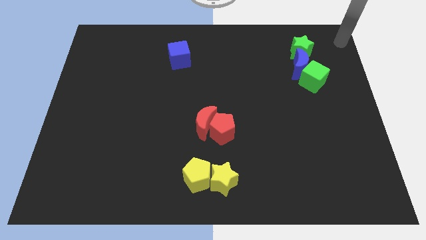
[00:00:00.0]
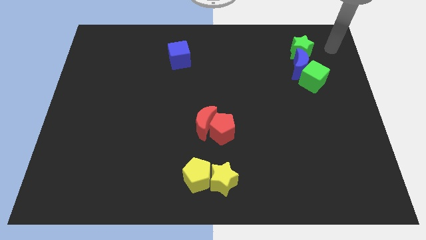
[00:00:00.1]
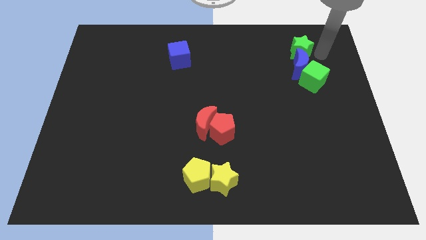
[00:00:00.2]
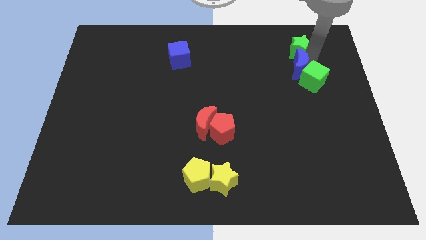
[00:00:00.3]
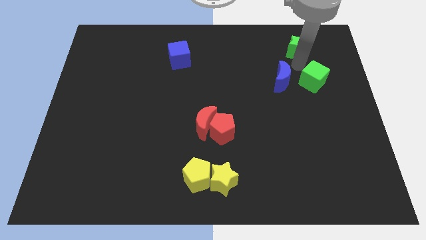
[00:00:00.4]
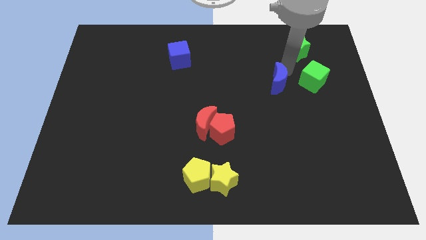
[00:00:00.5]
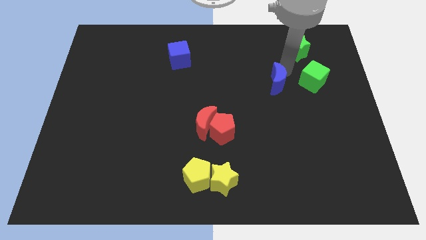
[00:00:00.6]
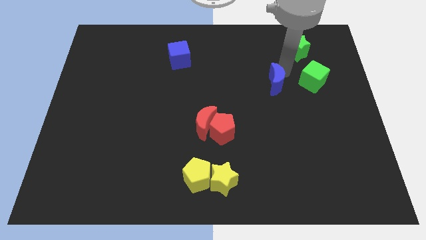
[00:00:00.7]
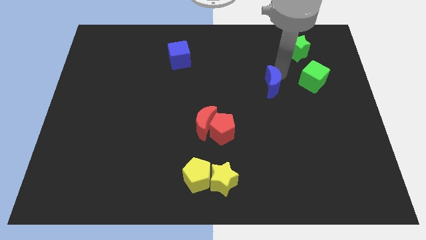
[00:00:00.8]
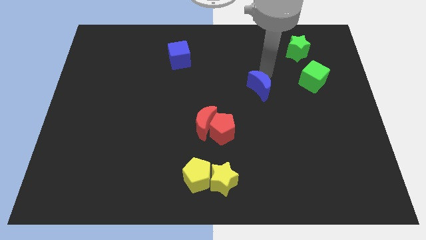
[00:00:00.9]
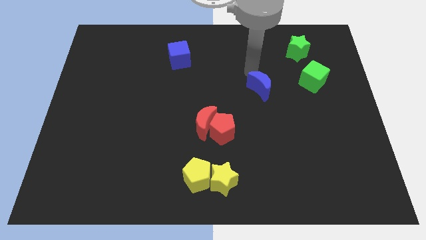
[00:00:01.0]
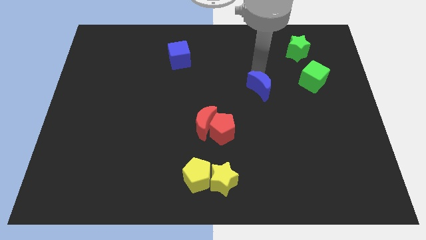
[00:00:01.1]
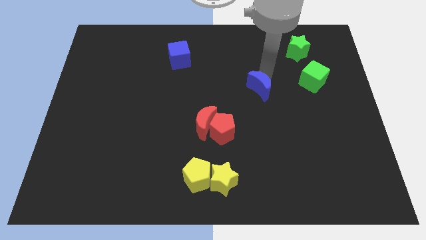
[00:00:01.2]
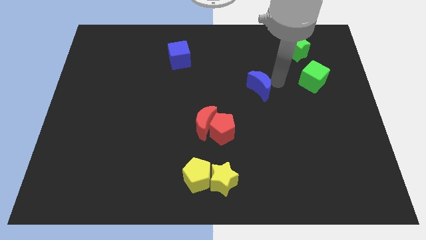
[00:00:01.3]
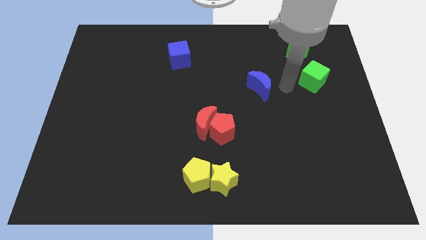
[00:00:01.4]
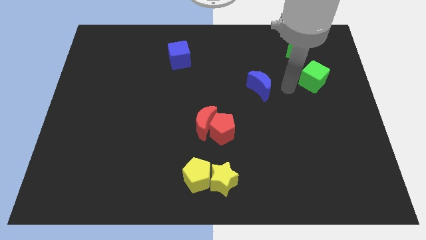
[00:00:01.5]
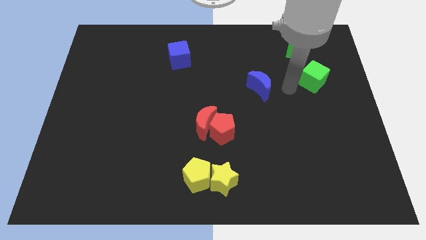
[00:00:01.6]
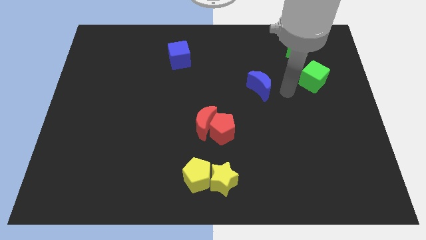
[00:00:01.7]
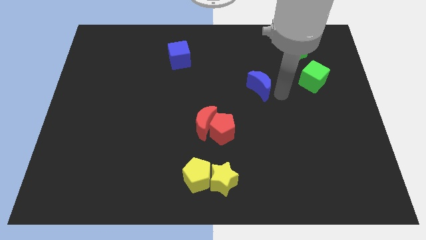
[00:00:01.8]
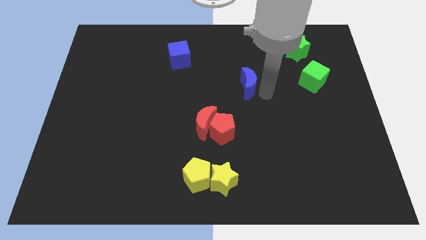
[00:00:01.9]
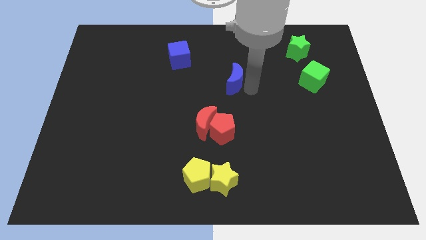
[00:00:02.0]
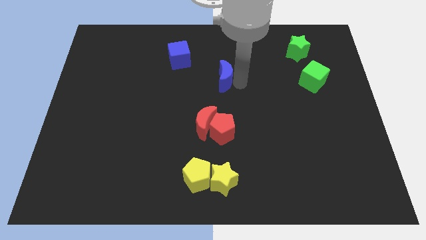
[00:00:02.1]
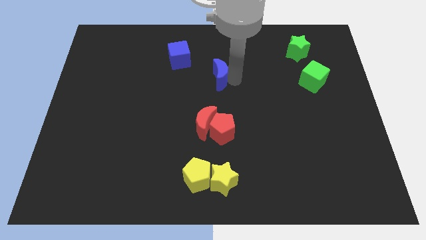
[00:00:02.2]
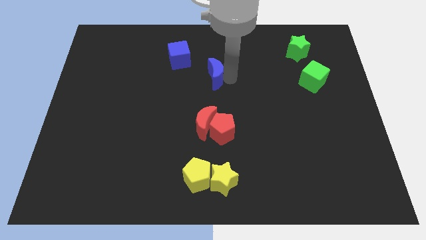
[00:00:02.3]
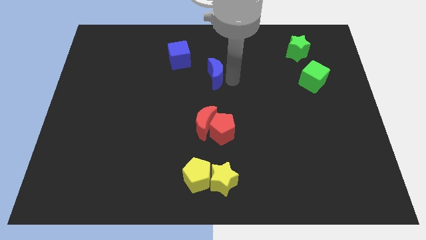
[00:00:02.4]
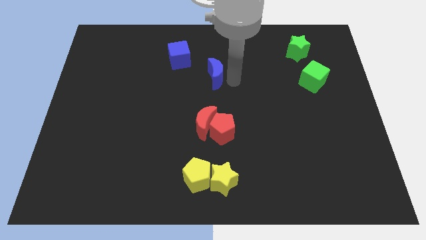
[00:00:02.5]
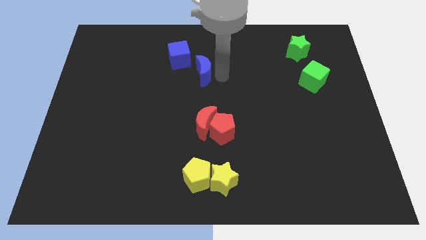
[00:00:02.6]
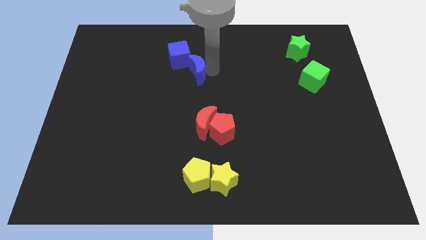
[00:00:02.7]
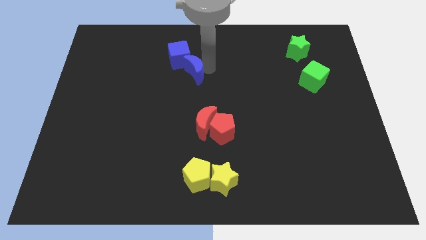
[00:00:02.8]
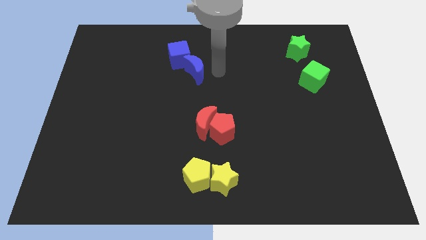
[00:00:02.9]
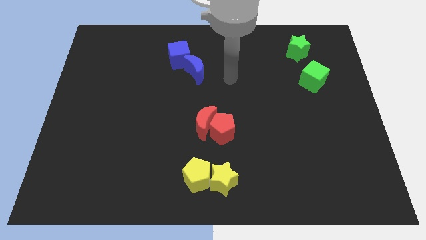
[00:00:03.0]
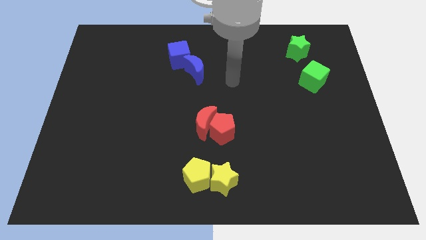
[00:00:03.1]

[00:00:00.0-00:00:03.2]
put the blue moon vertically above the red moon

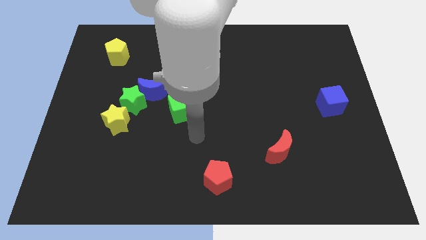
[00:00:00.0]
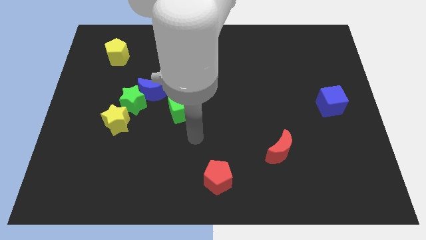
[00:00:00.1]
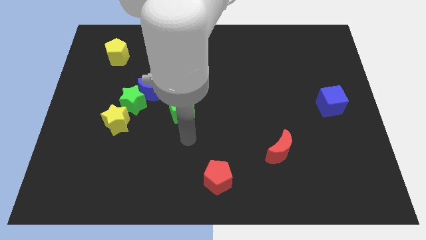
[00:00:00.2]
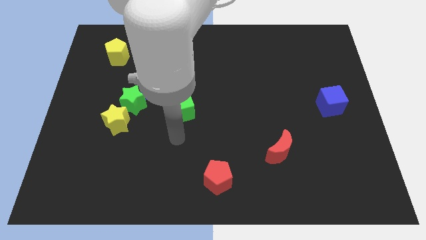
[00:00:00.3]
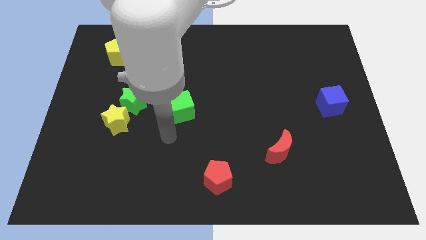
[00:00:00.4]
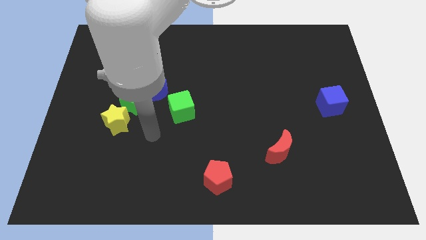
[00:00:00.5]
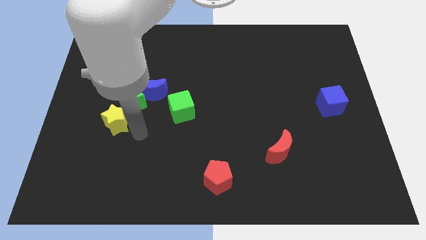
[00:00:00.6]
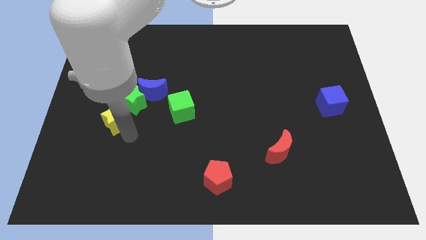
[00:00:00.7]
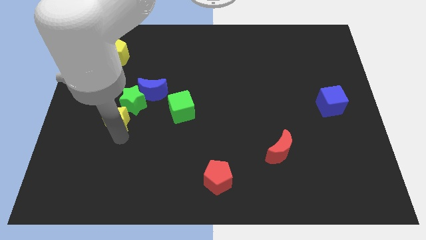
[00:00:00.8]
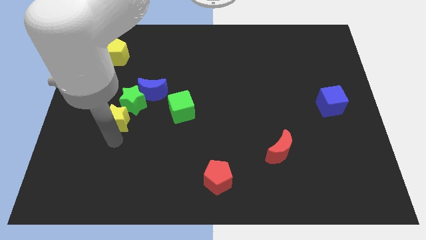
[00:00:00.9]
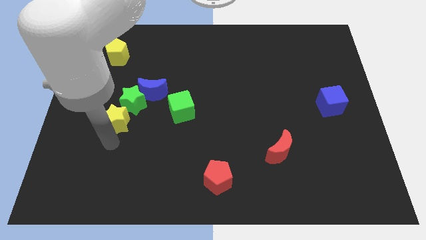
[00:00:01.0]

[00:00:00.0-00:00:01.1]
move your arm to the bottom of the yellow star

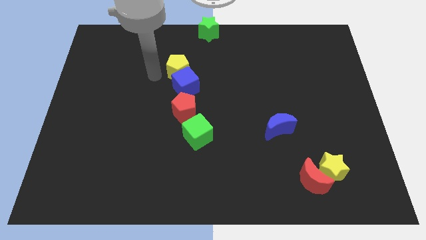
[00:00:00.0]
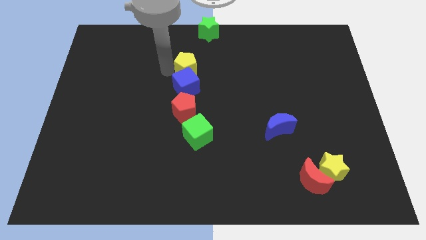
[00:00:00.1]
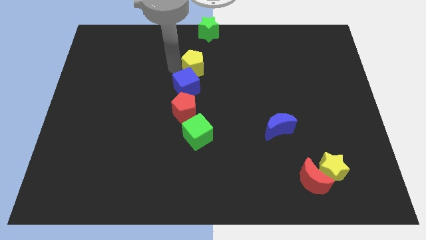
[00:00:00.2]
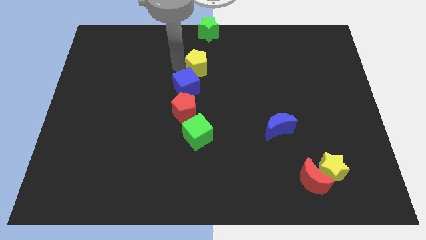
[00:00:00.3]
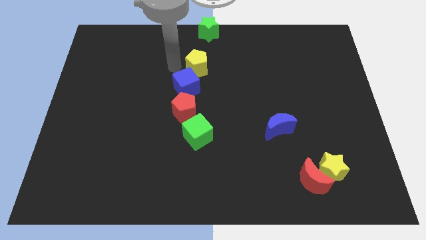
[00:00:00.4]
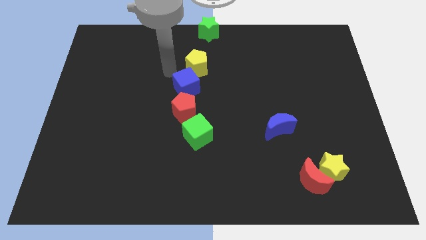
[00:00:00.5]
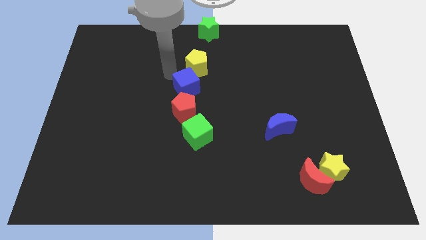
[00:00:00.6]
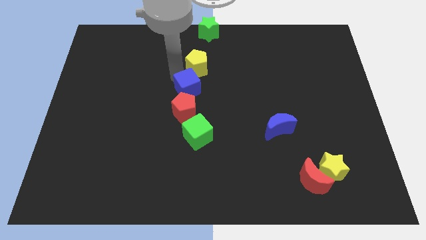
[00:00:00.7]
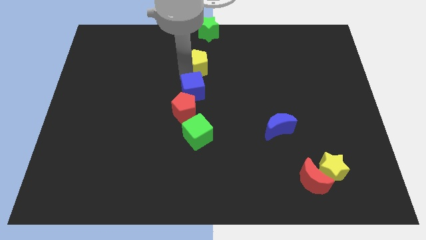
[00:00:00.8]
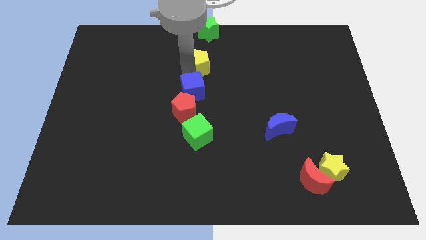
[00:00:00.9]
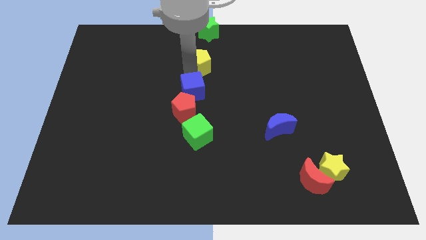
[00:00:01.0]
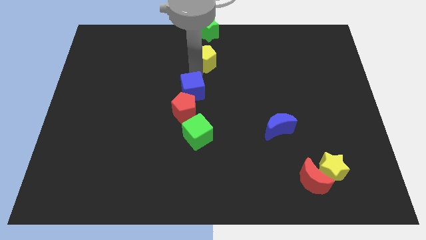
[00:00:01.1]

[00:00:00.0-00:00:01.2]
separate the yellow pentagon from blue cube

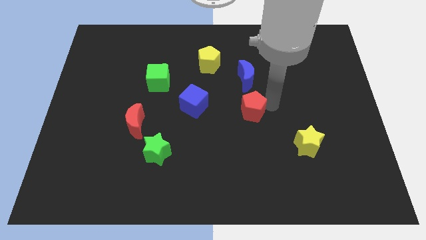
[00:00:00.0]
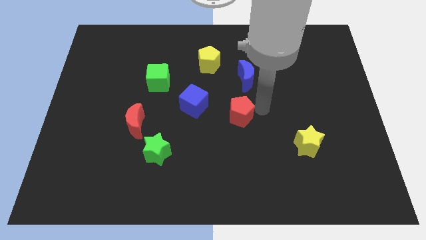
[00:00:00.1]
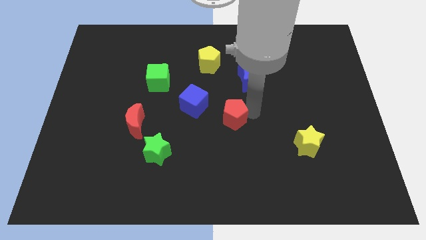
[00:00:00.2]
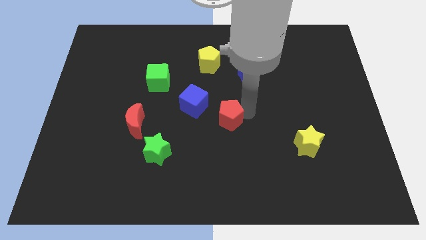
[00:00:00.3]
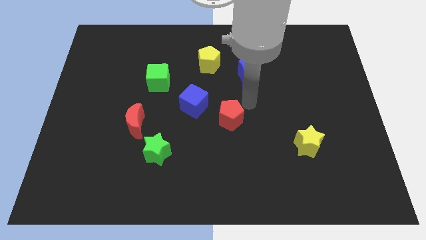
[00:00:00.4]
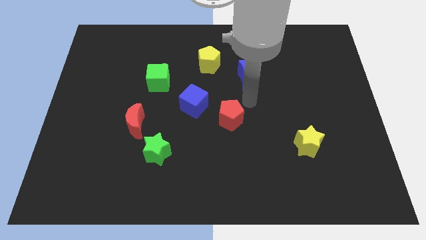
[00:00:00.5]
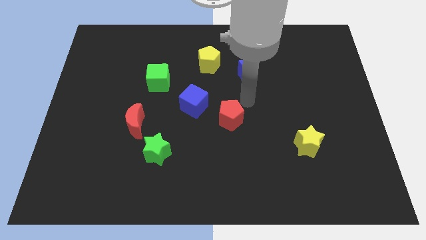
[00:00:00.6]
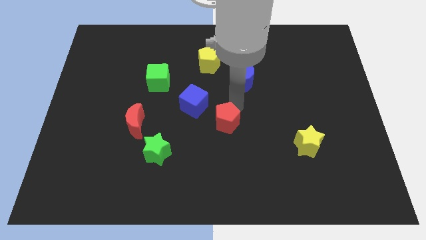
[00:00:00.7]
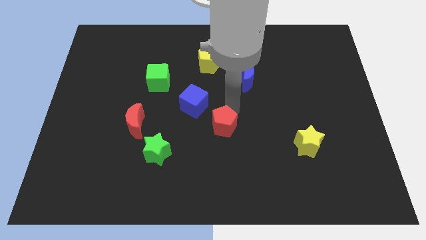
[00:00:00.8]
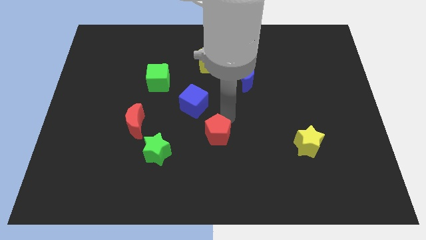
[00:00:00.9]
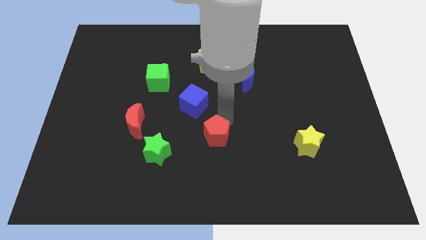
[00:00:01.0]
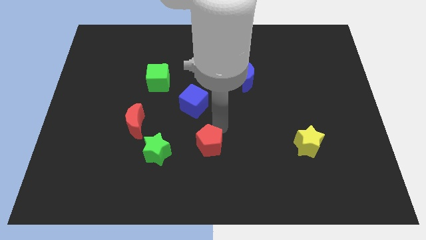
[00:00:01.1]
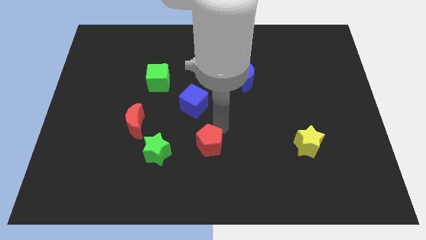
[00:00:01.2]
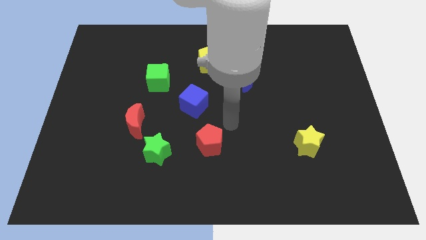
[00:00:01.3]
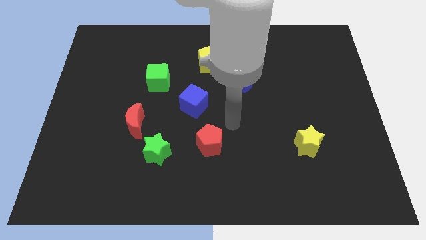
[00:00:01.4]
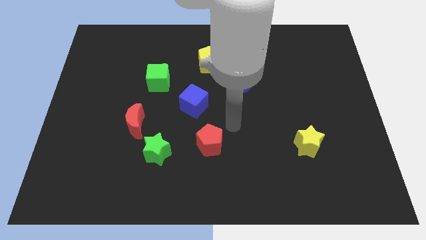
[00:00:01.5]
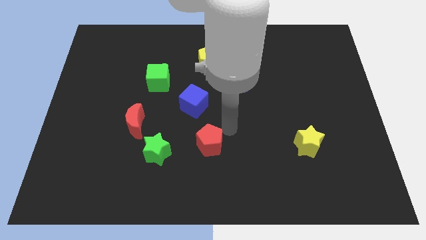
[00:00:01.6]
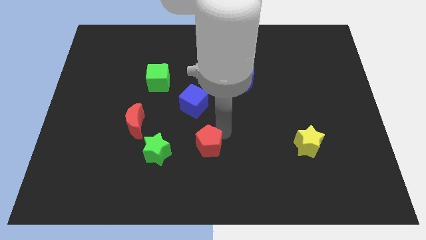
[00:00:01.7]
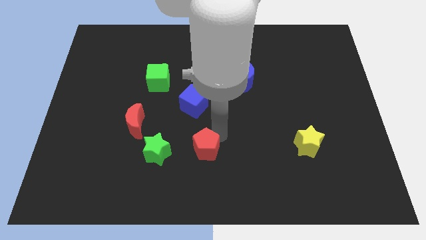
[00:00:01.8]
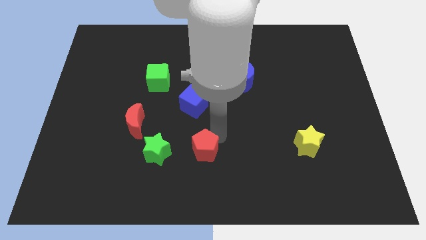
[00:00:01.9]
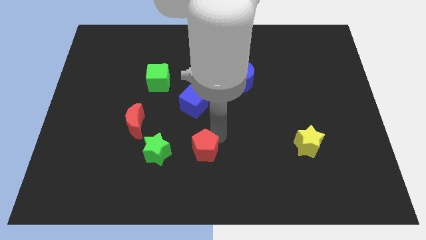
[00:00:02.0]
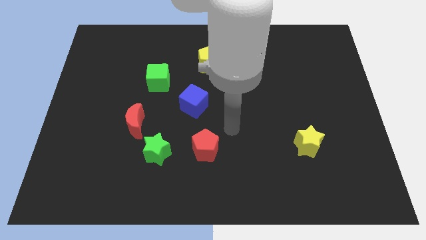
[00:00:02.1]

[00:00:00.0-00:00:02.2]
move the red pentagon to the right side of the green star

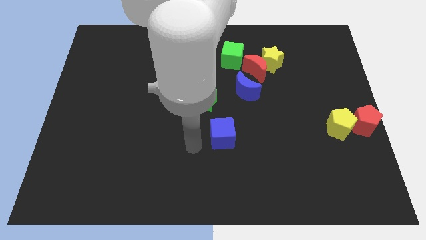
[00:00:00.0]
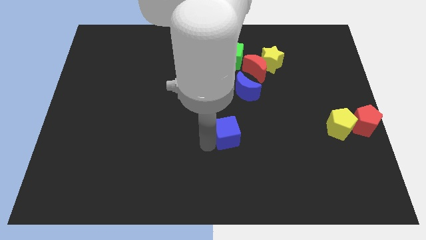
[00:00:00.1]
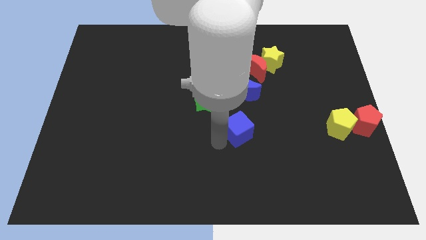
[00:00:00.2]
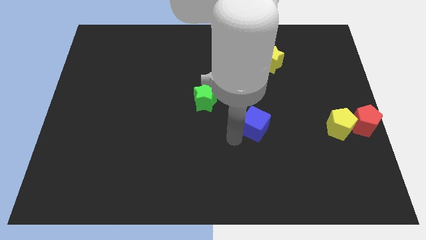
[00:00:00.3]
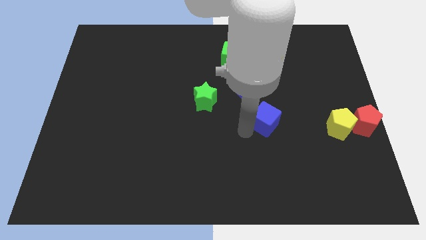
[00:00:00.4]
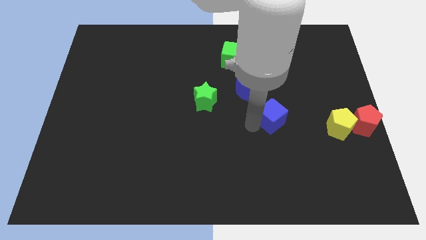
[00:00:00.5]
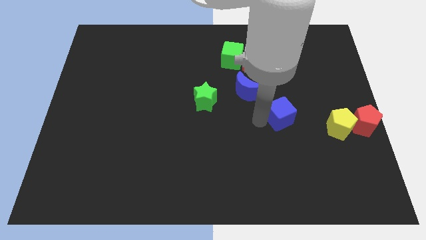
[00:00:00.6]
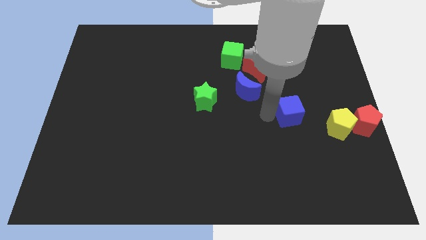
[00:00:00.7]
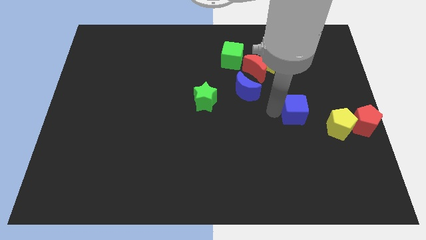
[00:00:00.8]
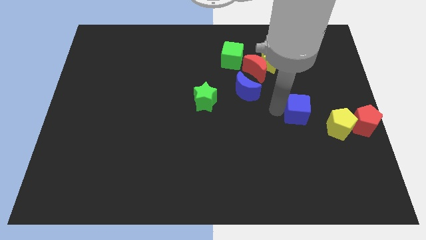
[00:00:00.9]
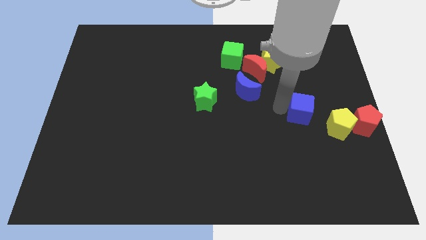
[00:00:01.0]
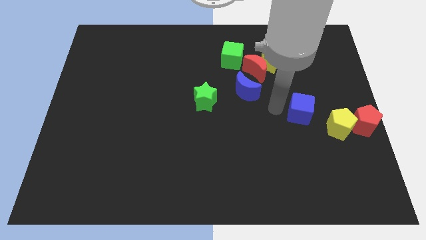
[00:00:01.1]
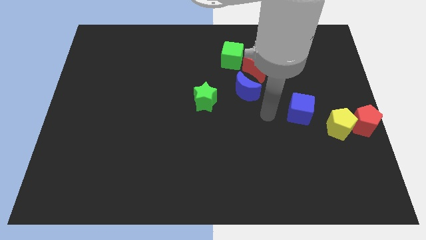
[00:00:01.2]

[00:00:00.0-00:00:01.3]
slide the blue cube diagonally close to the yellow pentagon
